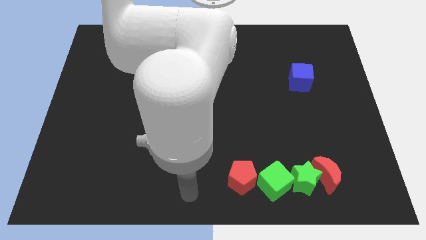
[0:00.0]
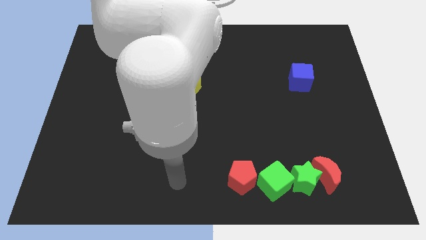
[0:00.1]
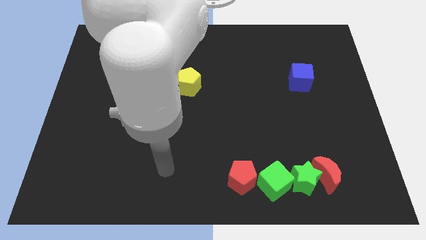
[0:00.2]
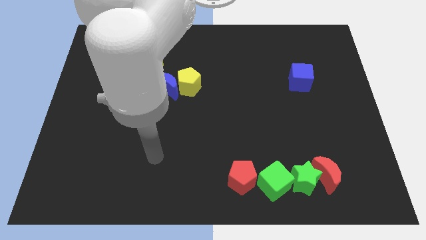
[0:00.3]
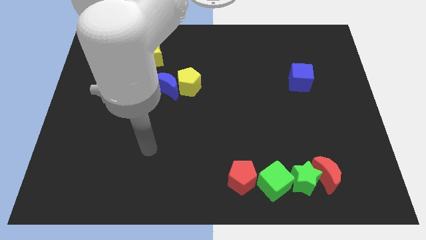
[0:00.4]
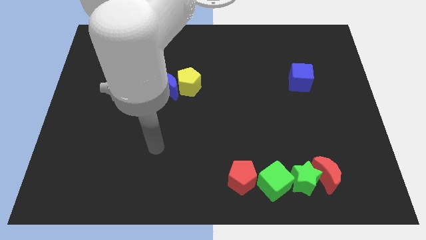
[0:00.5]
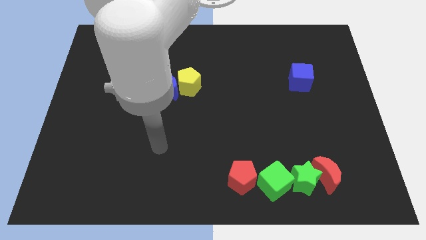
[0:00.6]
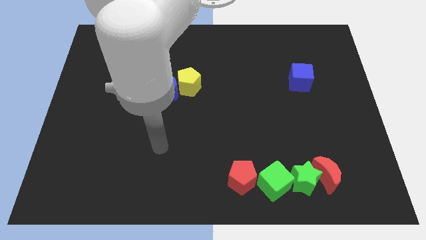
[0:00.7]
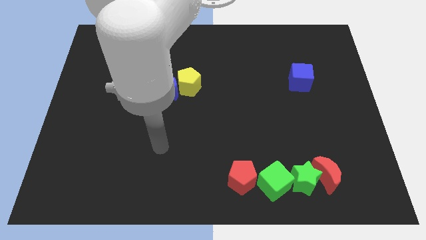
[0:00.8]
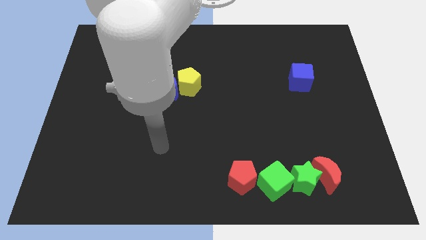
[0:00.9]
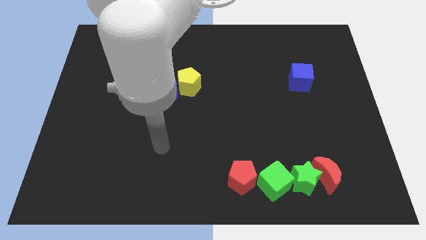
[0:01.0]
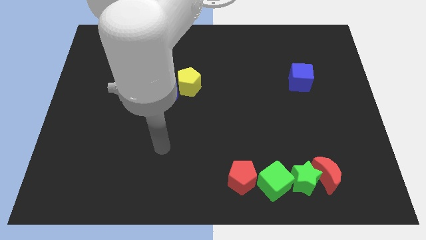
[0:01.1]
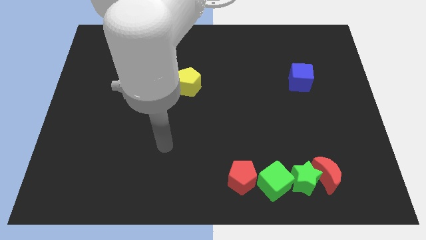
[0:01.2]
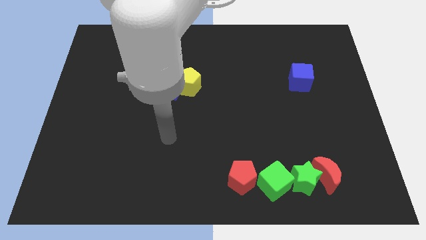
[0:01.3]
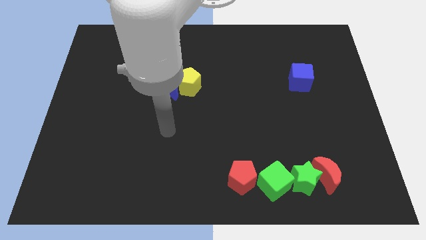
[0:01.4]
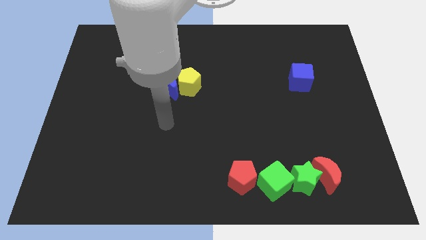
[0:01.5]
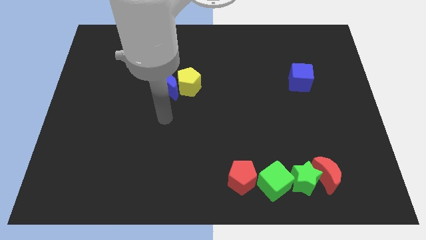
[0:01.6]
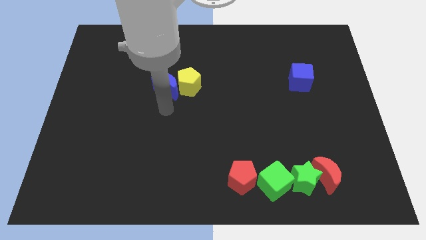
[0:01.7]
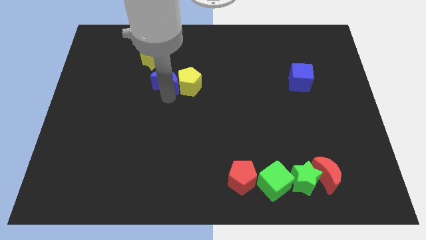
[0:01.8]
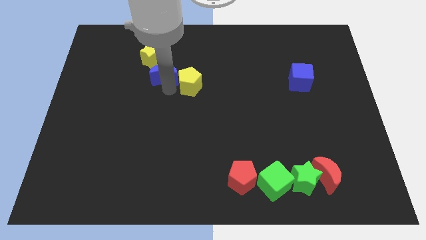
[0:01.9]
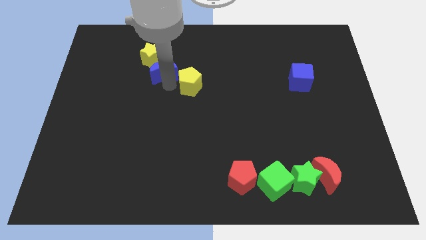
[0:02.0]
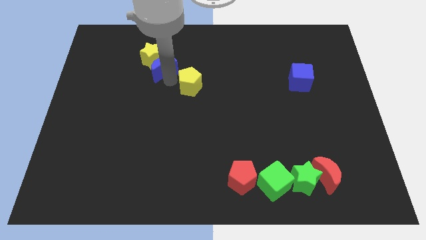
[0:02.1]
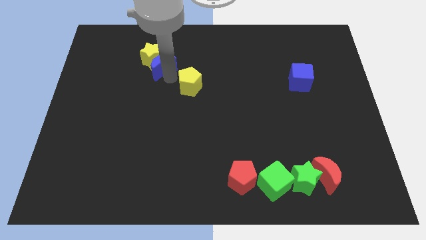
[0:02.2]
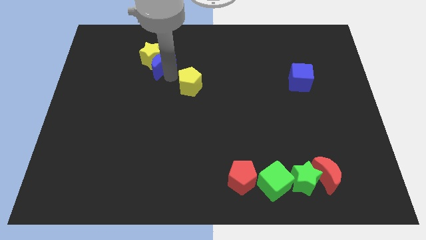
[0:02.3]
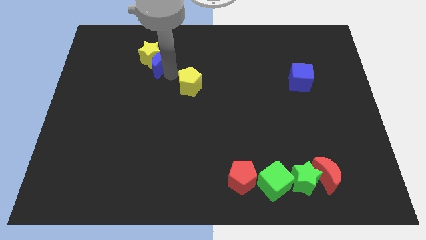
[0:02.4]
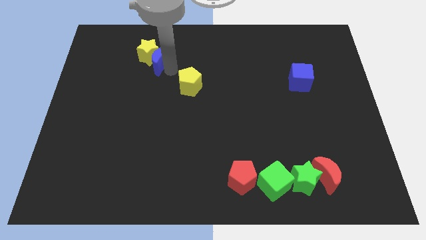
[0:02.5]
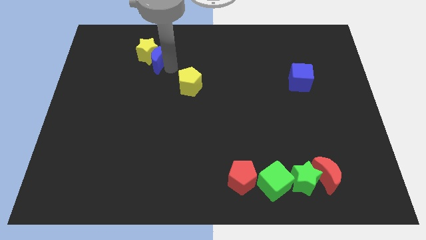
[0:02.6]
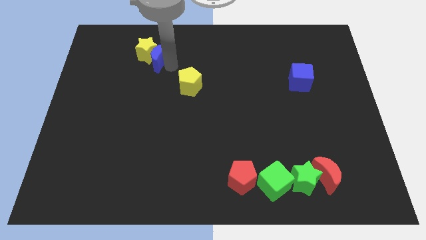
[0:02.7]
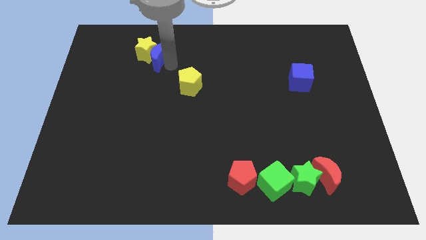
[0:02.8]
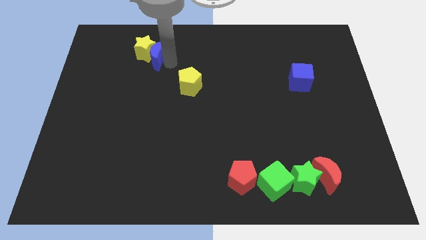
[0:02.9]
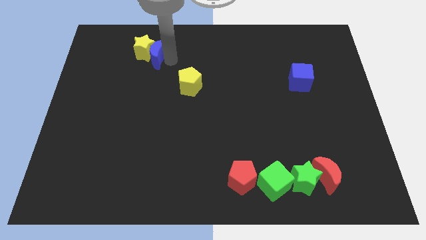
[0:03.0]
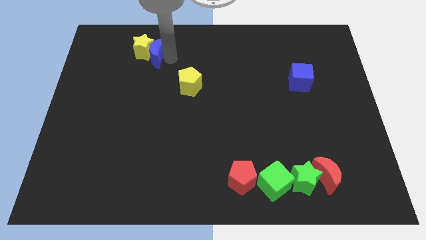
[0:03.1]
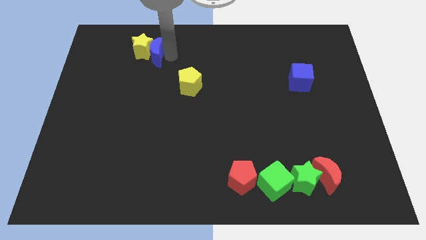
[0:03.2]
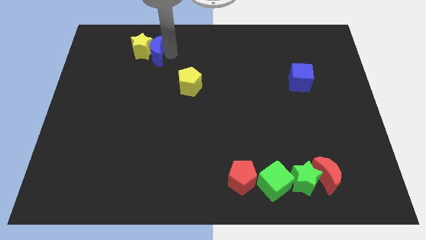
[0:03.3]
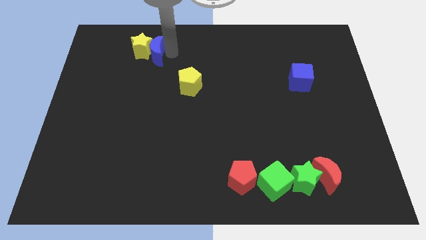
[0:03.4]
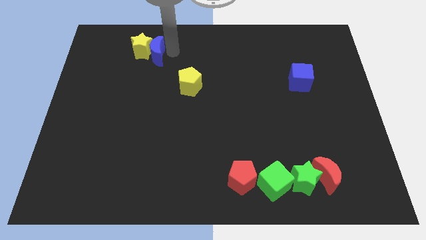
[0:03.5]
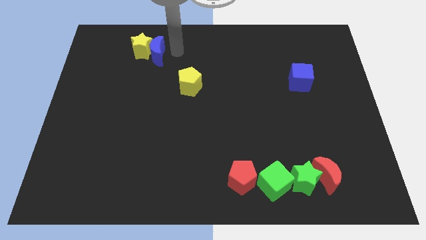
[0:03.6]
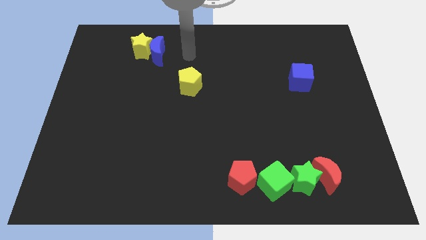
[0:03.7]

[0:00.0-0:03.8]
push the blue crescent to the right side of the yellow star

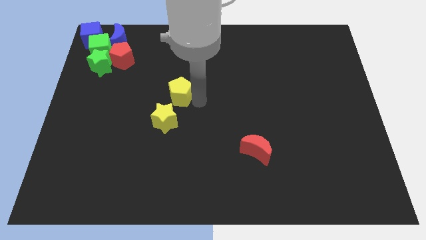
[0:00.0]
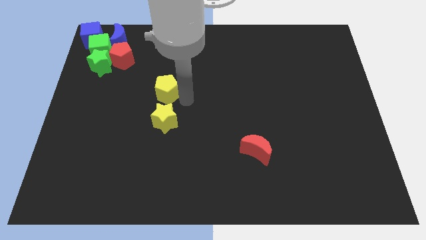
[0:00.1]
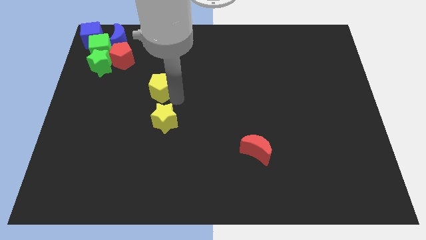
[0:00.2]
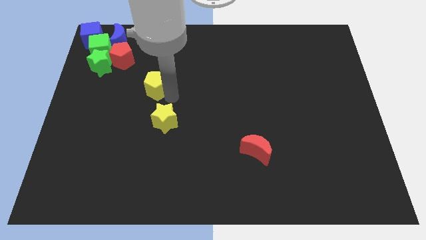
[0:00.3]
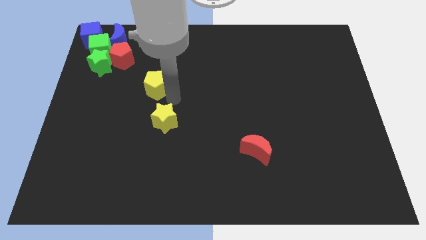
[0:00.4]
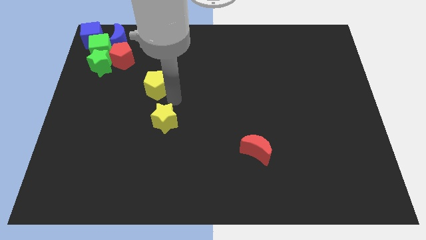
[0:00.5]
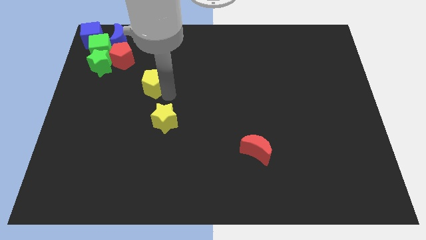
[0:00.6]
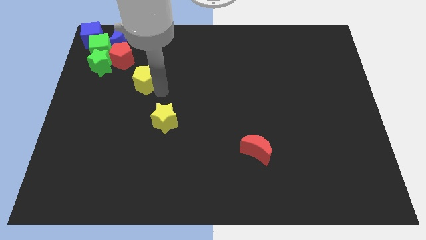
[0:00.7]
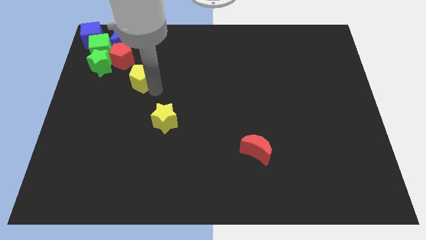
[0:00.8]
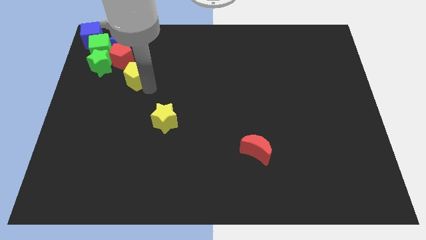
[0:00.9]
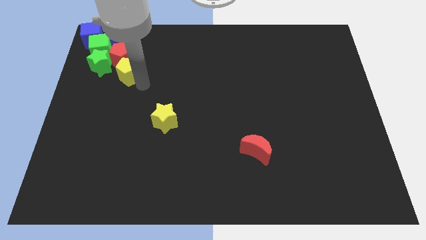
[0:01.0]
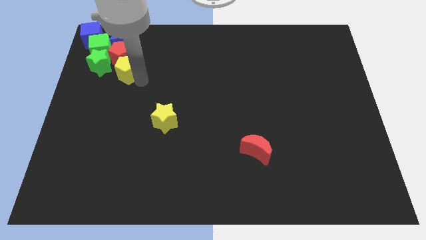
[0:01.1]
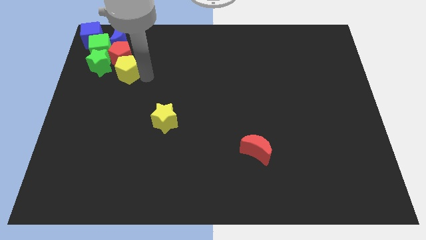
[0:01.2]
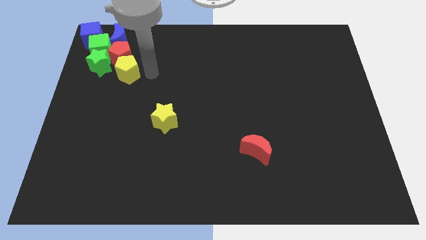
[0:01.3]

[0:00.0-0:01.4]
move the yellow pentagon towards the group of blocks

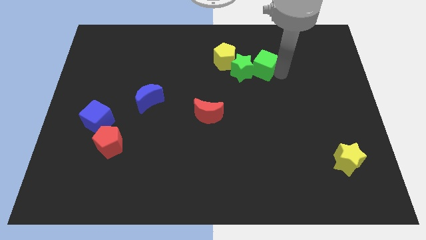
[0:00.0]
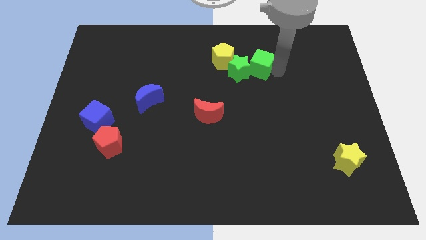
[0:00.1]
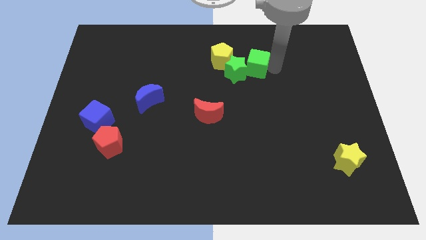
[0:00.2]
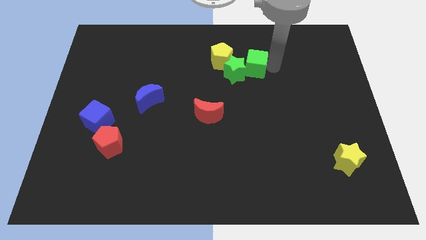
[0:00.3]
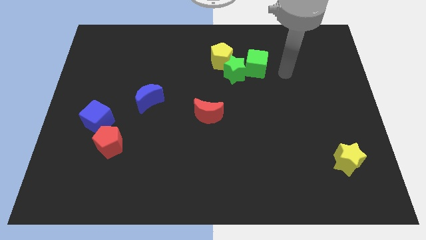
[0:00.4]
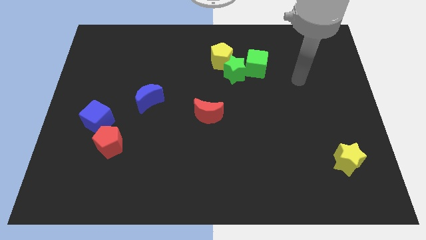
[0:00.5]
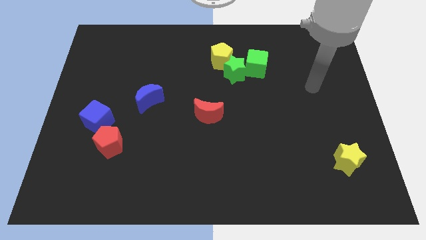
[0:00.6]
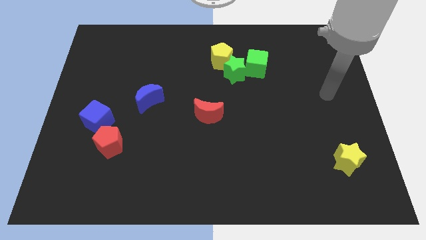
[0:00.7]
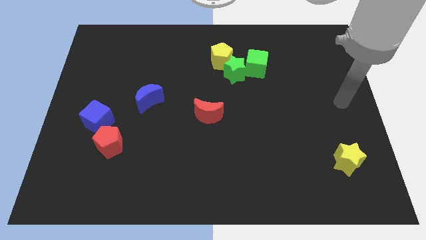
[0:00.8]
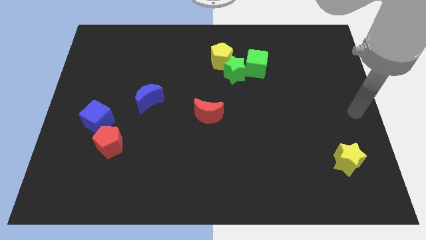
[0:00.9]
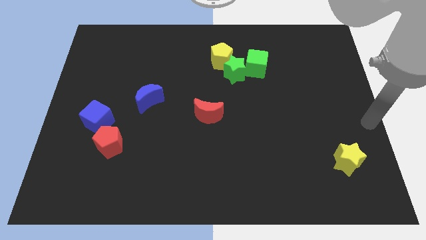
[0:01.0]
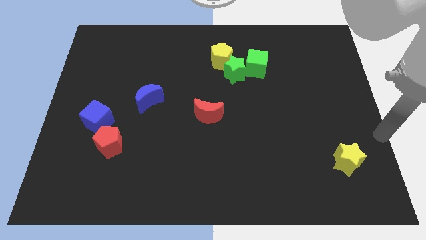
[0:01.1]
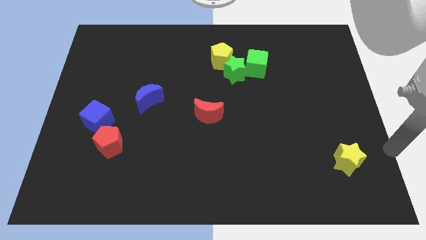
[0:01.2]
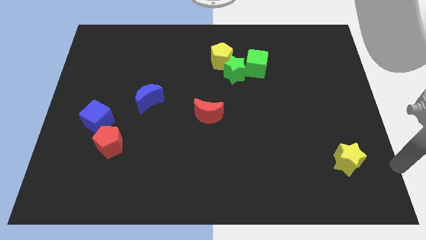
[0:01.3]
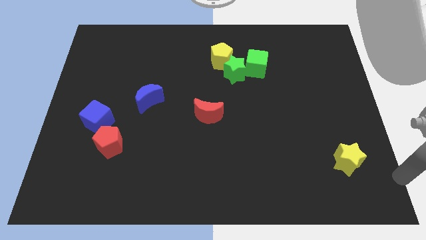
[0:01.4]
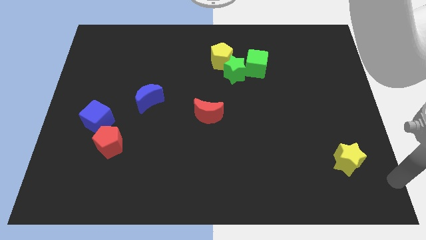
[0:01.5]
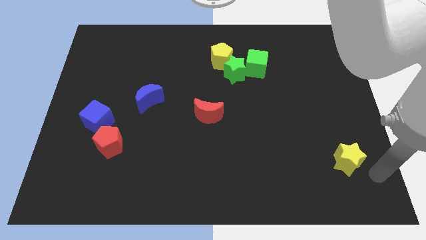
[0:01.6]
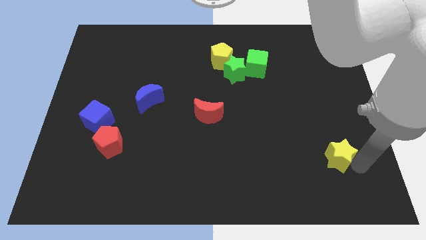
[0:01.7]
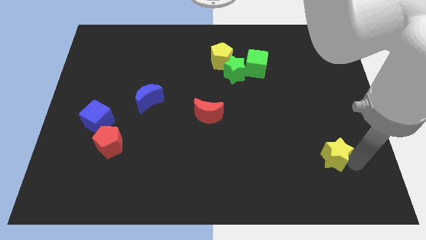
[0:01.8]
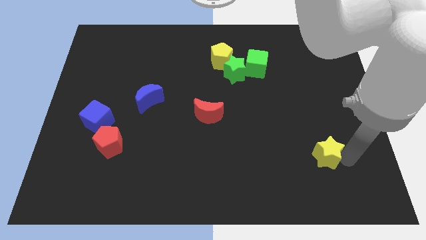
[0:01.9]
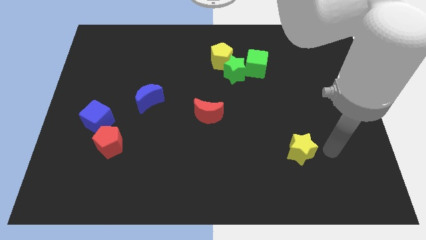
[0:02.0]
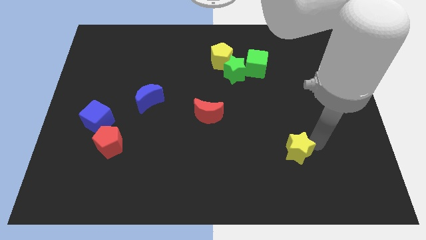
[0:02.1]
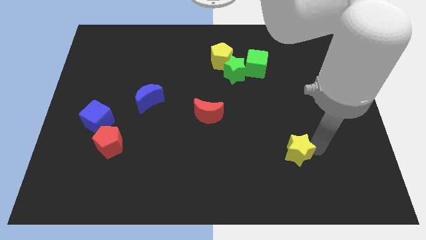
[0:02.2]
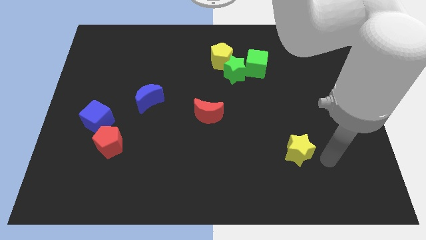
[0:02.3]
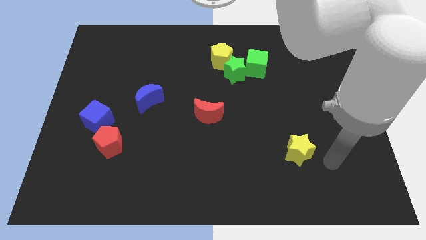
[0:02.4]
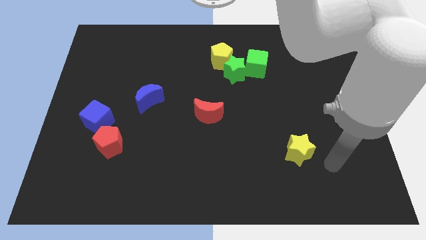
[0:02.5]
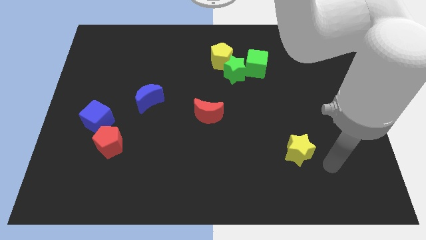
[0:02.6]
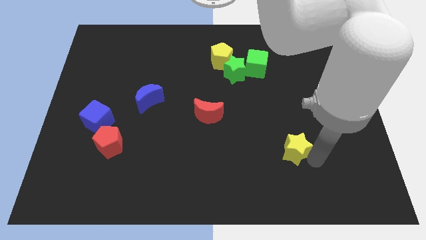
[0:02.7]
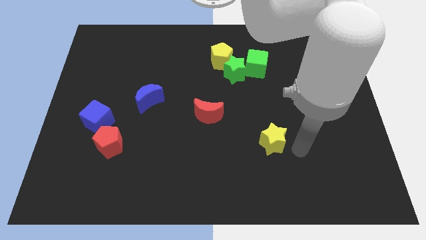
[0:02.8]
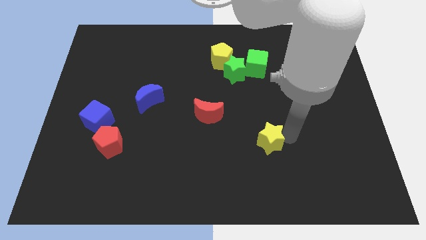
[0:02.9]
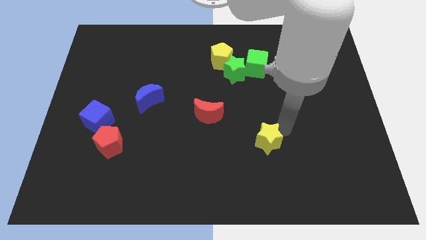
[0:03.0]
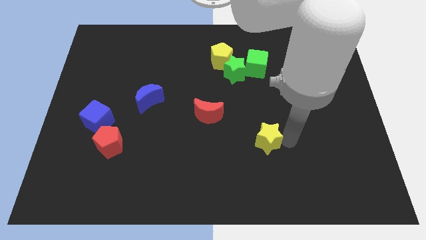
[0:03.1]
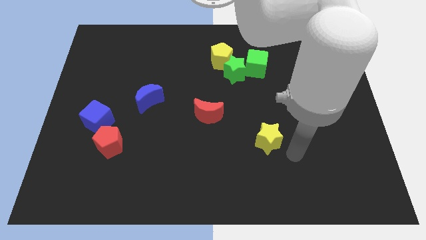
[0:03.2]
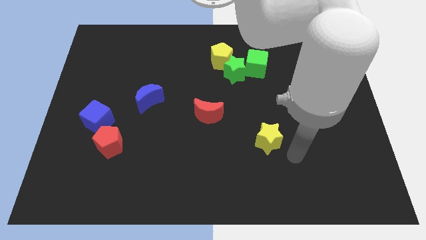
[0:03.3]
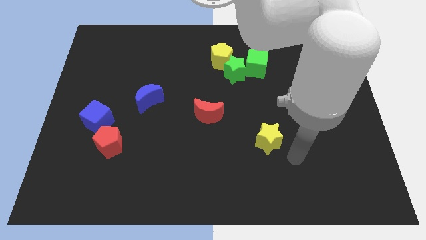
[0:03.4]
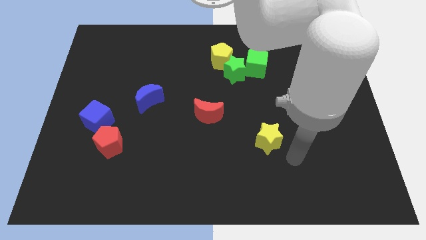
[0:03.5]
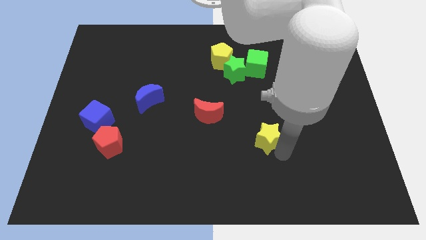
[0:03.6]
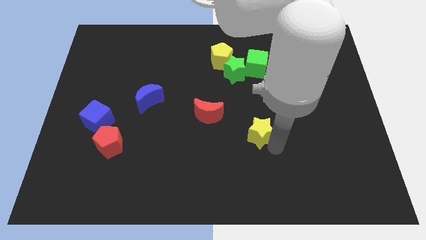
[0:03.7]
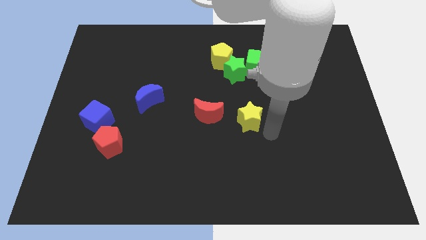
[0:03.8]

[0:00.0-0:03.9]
move the arm to the bottom of the yellow star
